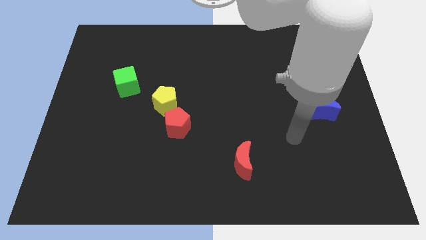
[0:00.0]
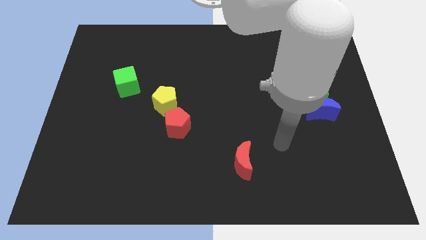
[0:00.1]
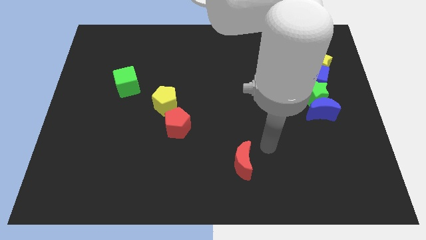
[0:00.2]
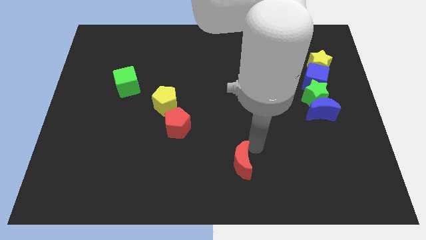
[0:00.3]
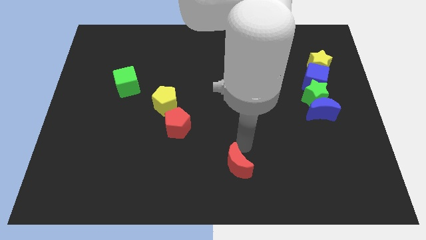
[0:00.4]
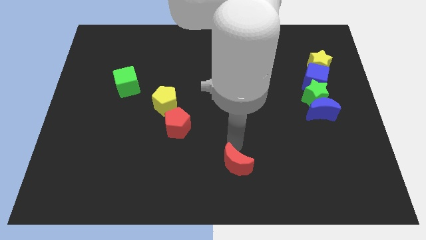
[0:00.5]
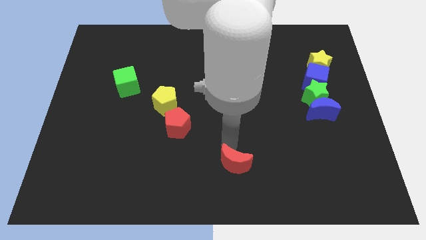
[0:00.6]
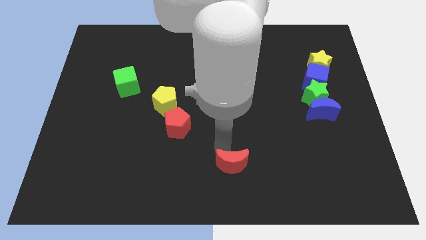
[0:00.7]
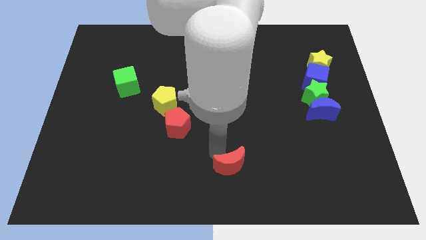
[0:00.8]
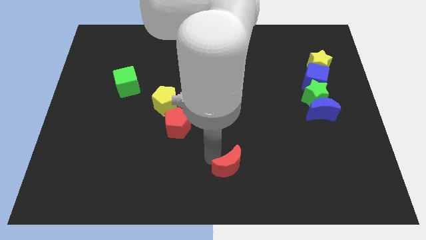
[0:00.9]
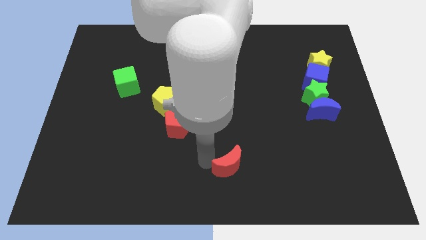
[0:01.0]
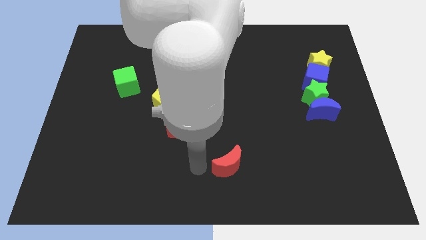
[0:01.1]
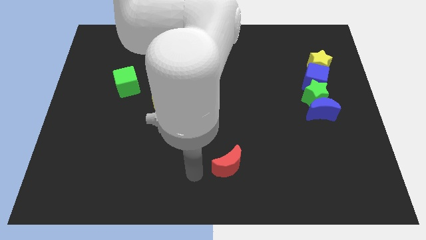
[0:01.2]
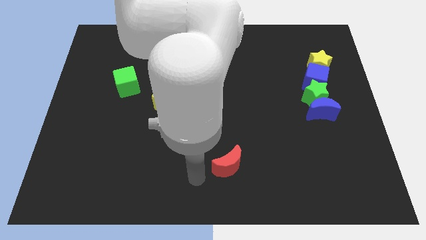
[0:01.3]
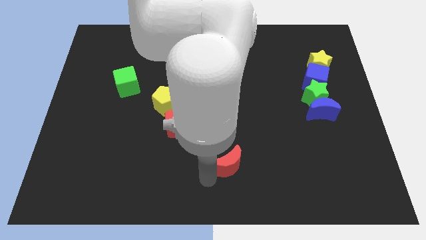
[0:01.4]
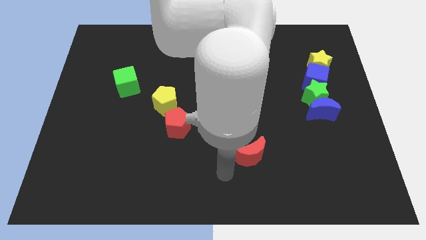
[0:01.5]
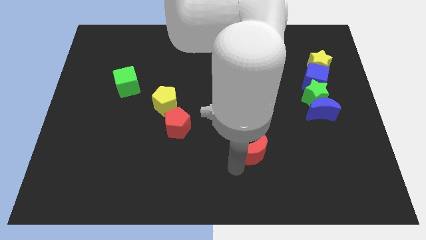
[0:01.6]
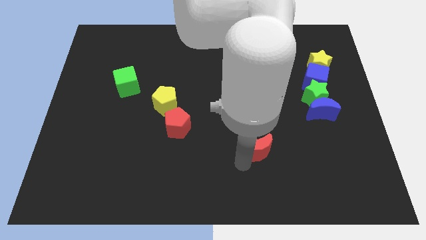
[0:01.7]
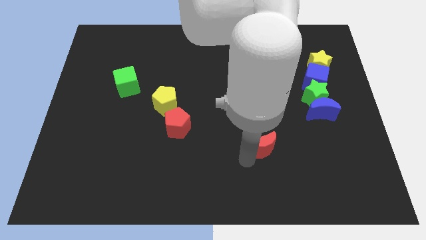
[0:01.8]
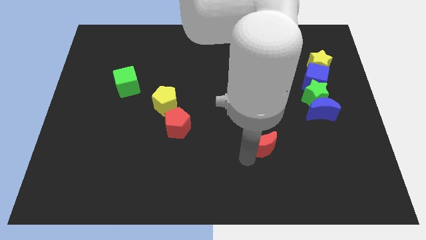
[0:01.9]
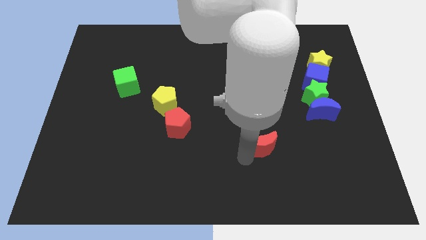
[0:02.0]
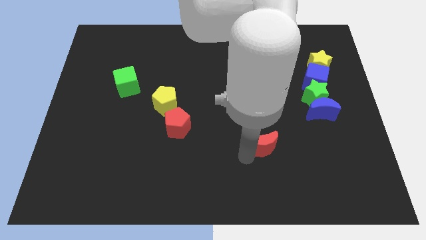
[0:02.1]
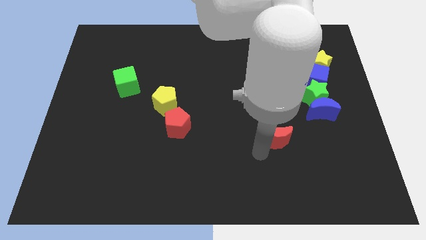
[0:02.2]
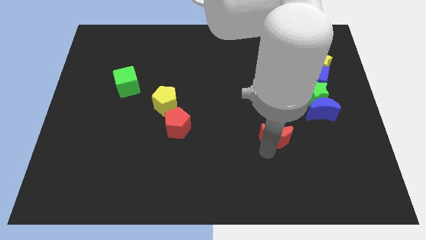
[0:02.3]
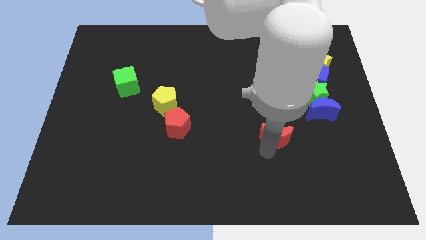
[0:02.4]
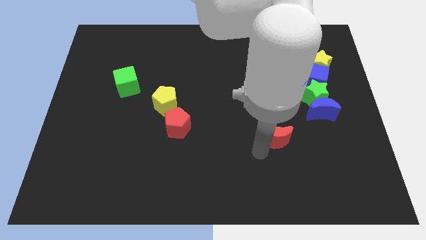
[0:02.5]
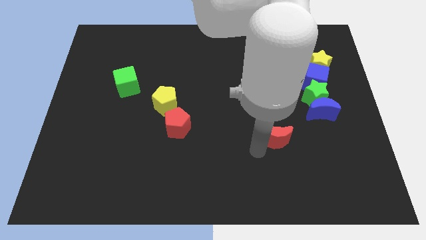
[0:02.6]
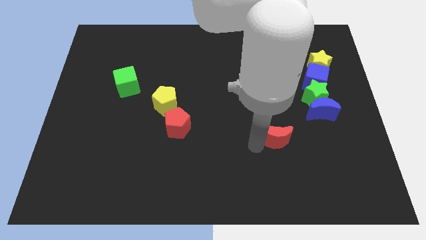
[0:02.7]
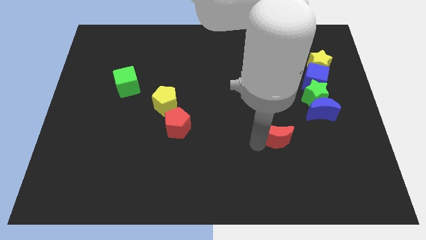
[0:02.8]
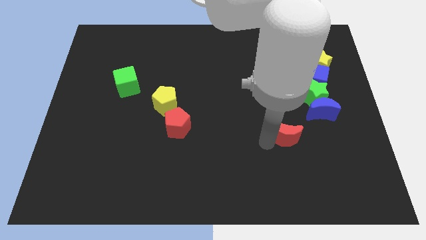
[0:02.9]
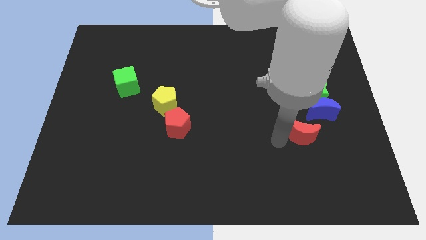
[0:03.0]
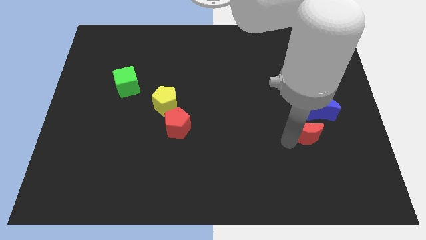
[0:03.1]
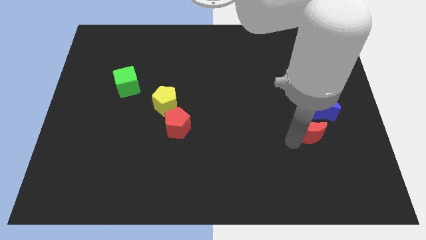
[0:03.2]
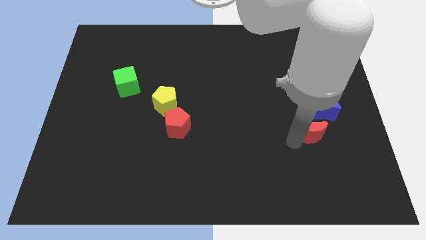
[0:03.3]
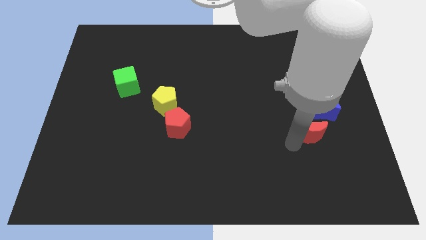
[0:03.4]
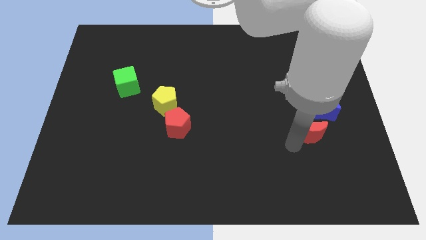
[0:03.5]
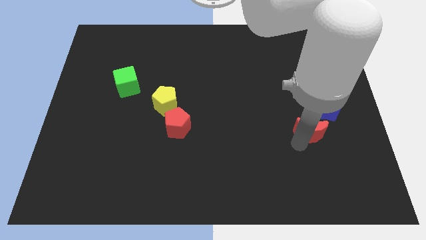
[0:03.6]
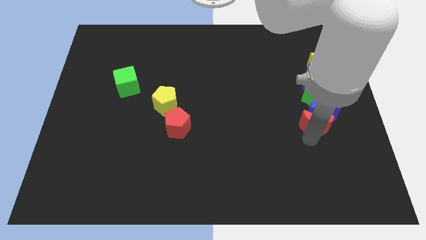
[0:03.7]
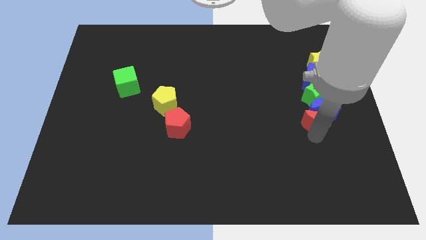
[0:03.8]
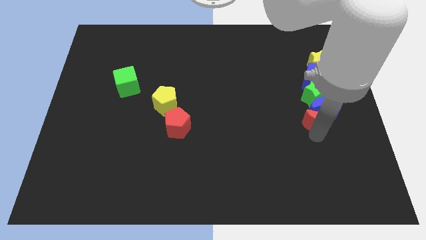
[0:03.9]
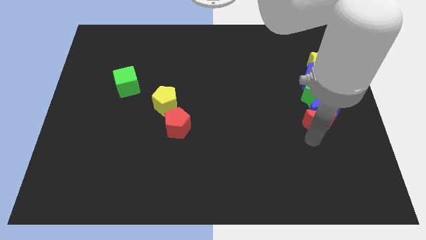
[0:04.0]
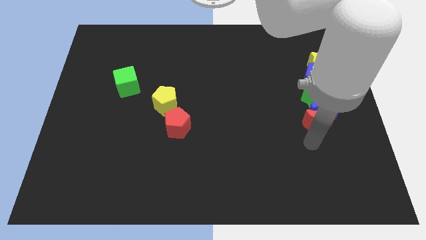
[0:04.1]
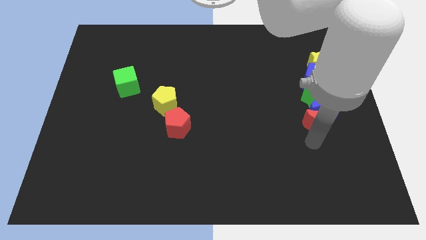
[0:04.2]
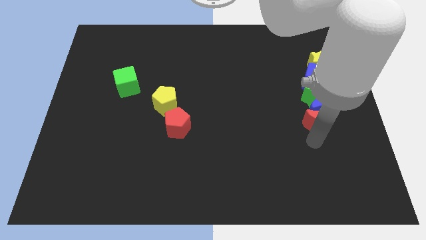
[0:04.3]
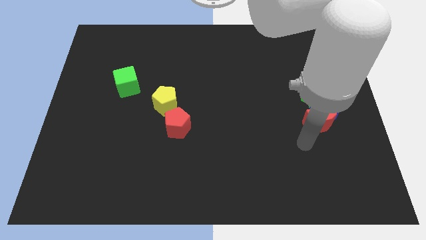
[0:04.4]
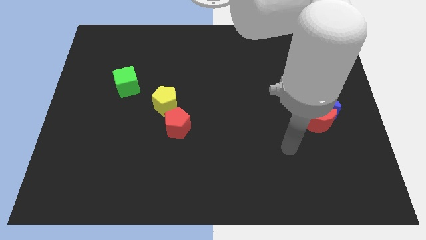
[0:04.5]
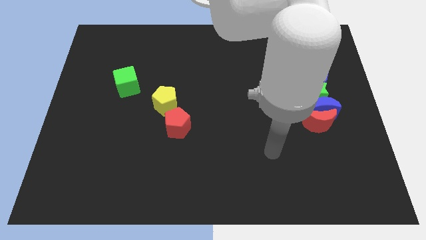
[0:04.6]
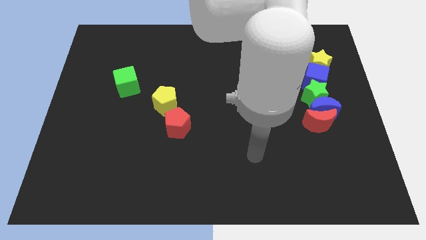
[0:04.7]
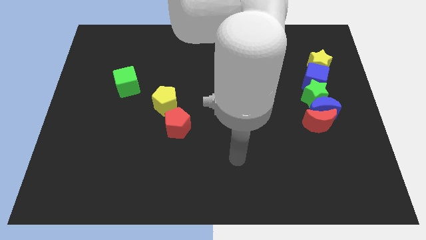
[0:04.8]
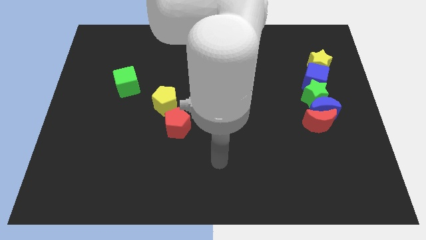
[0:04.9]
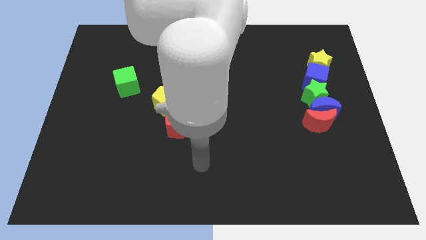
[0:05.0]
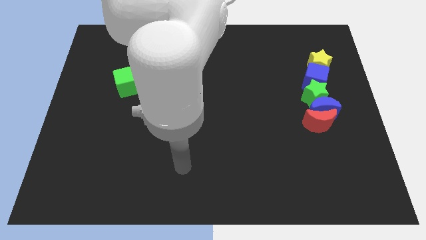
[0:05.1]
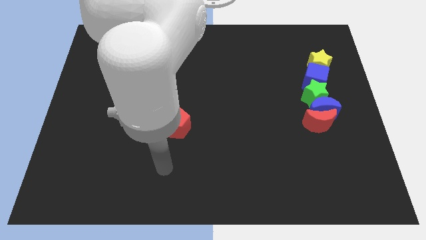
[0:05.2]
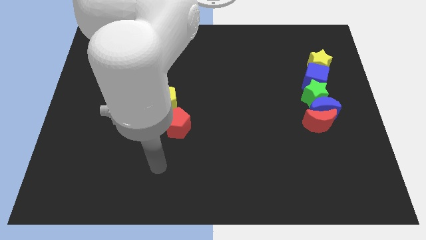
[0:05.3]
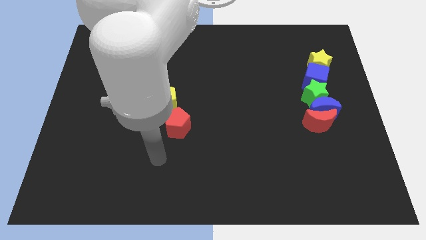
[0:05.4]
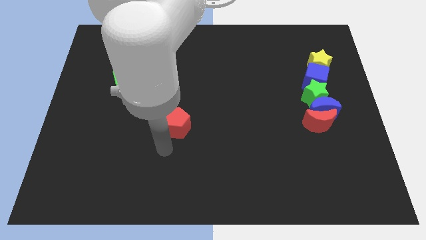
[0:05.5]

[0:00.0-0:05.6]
place the red crescent below the blue crescent

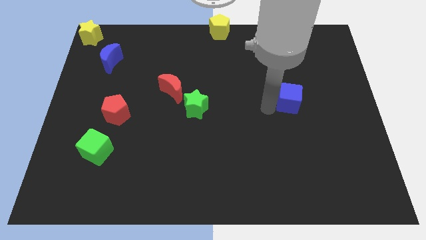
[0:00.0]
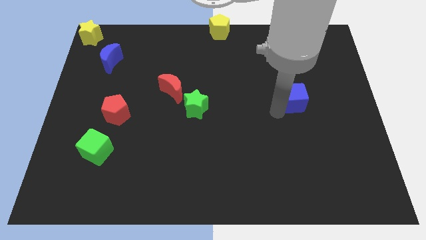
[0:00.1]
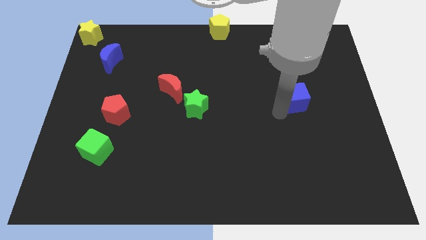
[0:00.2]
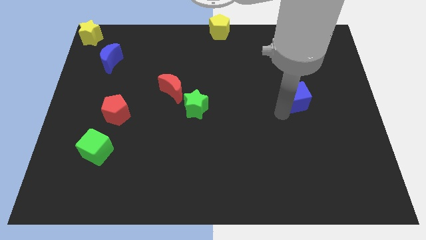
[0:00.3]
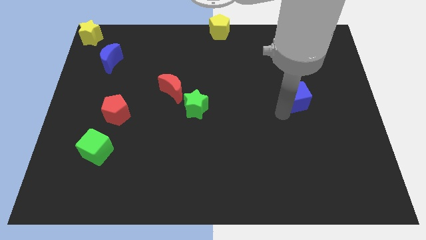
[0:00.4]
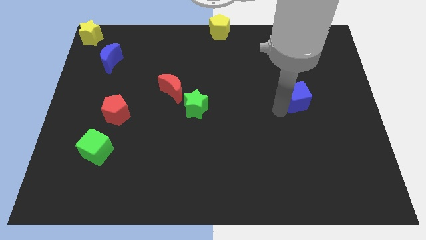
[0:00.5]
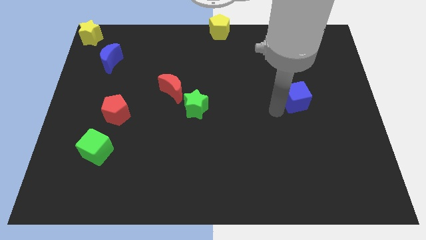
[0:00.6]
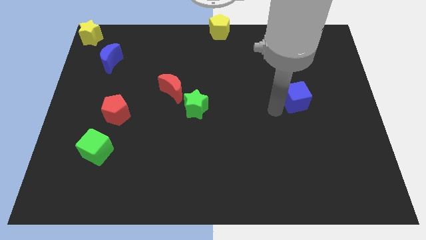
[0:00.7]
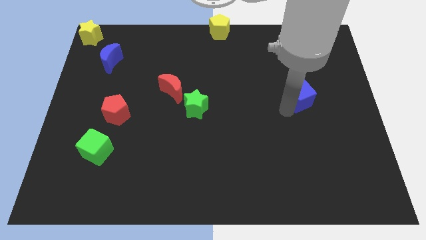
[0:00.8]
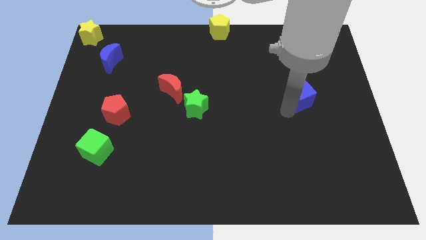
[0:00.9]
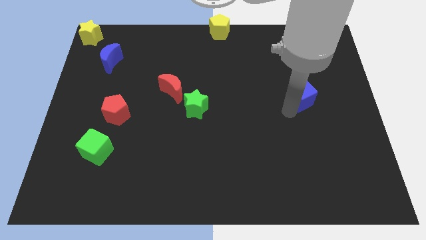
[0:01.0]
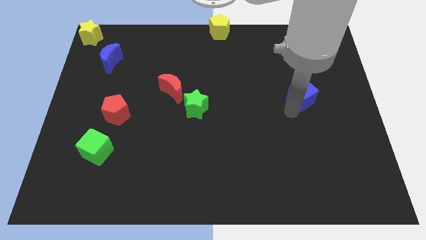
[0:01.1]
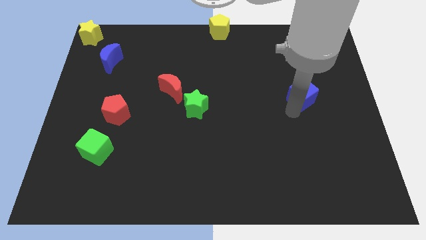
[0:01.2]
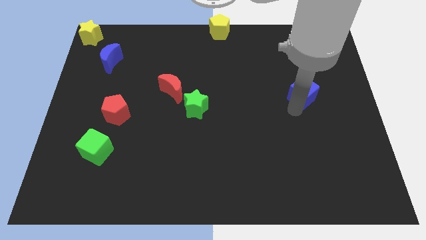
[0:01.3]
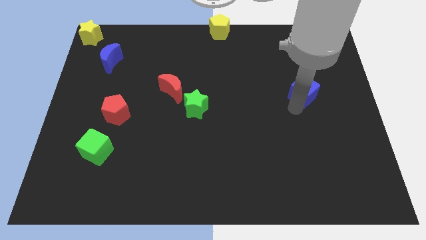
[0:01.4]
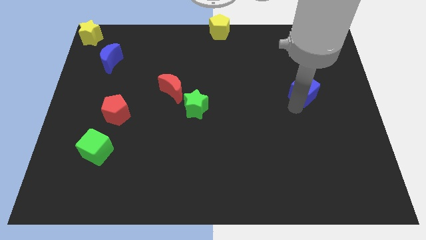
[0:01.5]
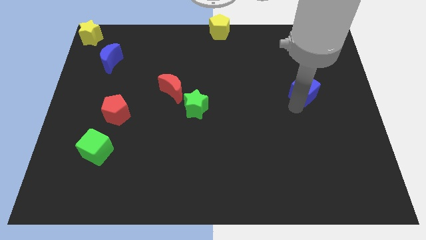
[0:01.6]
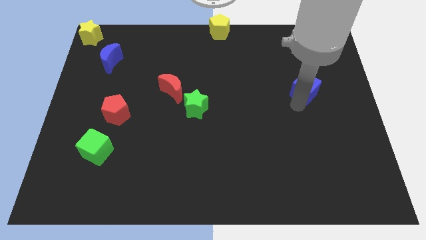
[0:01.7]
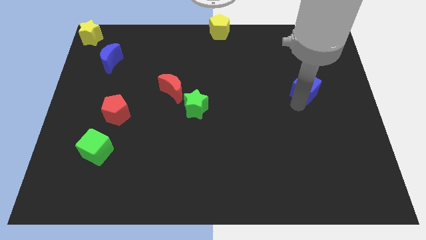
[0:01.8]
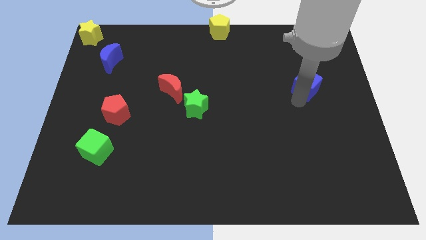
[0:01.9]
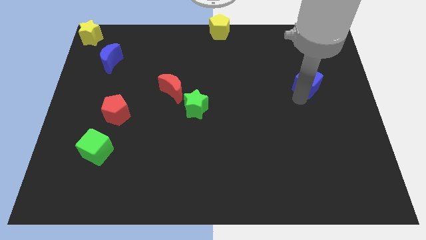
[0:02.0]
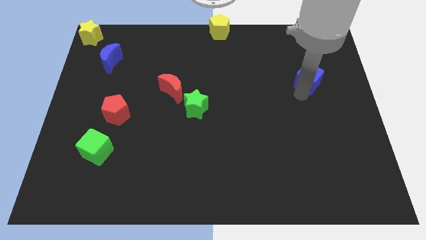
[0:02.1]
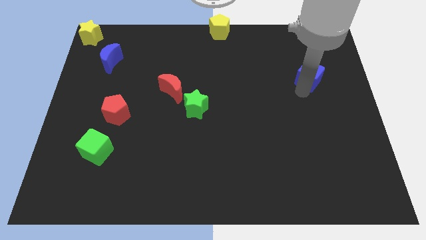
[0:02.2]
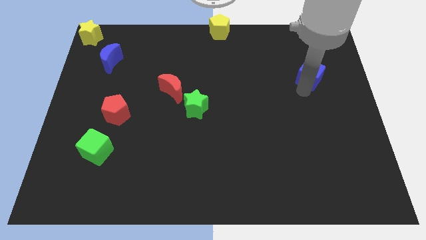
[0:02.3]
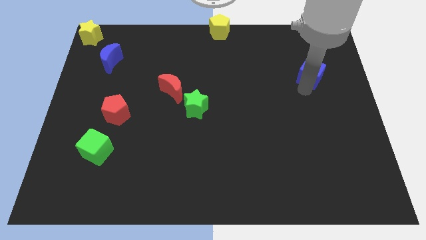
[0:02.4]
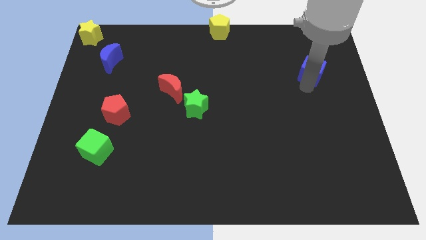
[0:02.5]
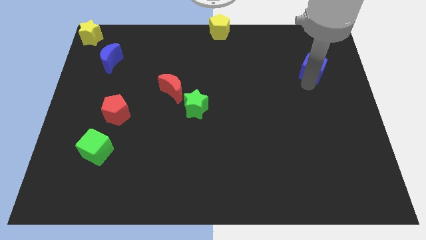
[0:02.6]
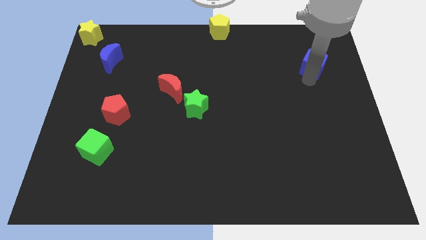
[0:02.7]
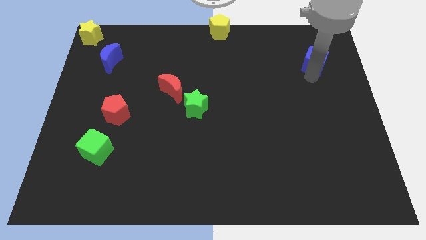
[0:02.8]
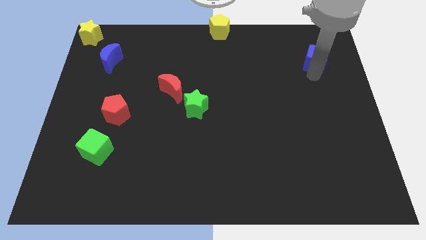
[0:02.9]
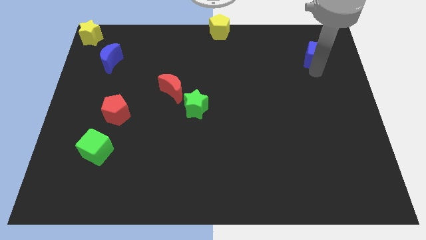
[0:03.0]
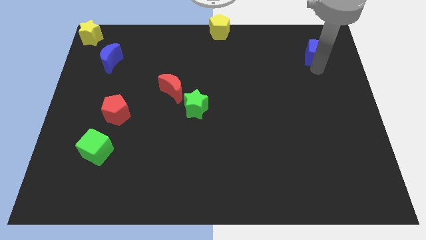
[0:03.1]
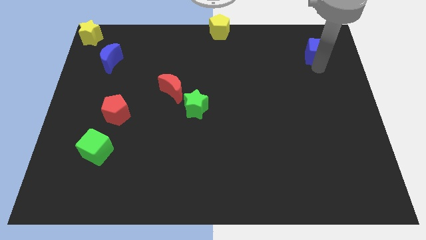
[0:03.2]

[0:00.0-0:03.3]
drag the blue cube diagonally top right to the red moon
